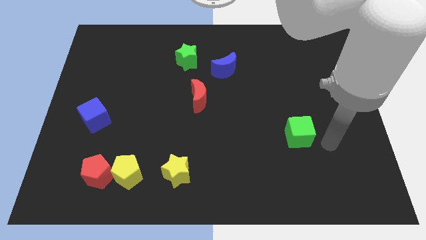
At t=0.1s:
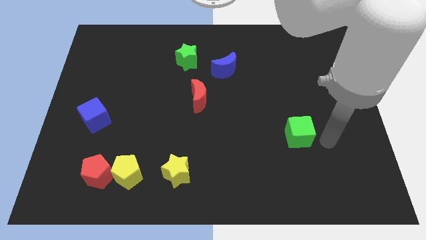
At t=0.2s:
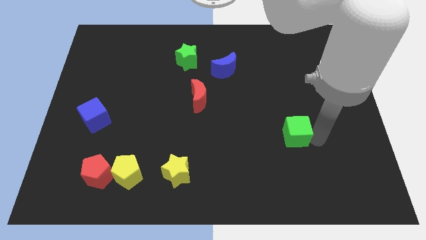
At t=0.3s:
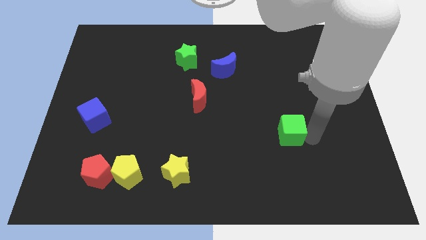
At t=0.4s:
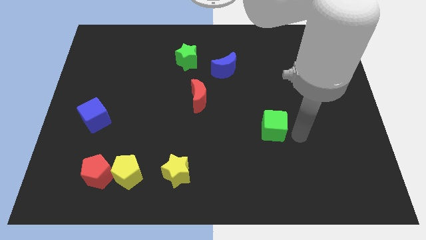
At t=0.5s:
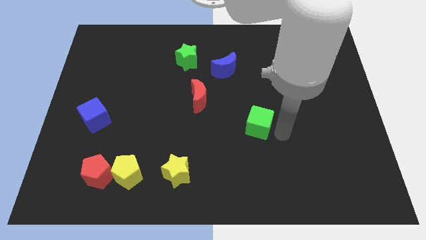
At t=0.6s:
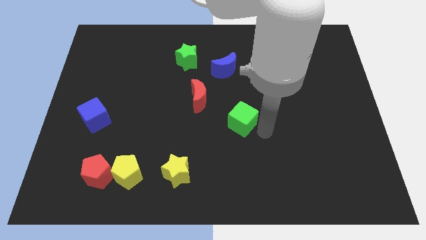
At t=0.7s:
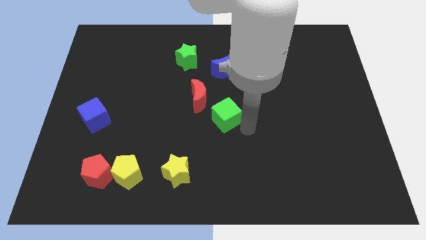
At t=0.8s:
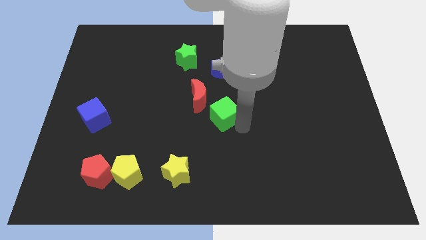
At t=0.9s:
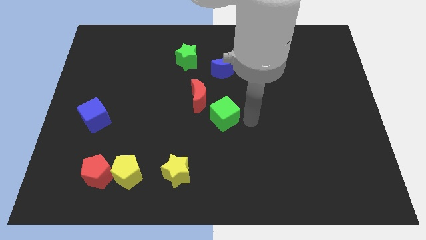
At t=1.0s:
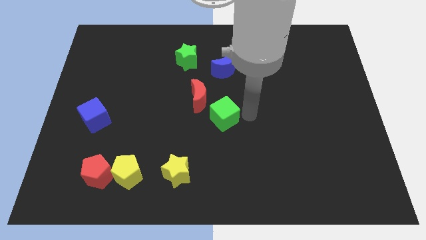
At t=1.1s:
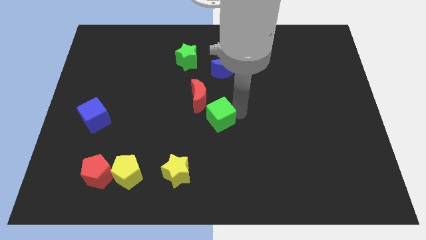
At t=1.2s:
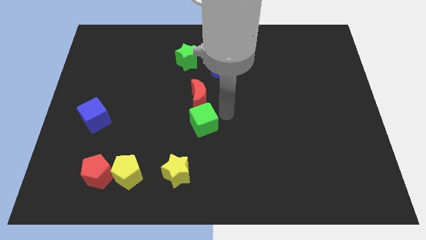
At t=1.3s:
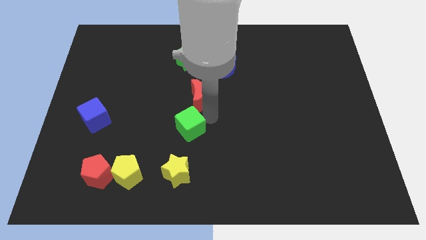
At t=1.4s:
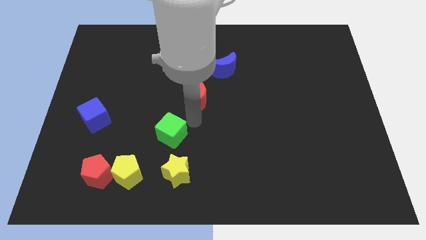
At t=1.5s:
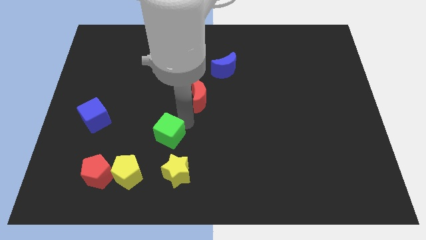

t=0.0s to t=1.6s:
push the green cube upwards to the yellow star

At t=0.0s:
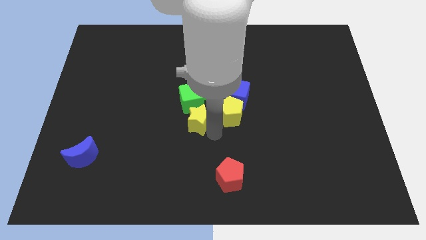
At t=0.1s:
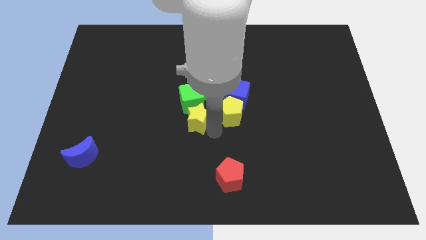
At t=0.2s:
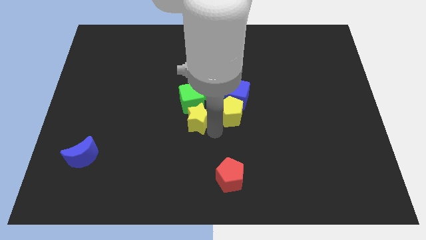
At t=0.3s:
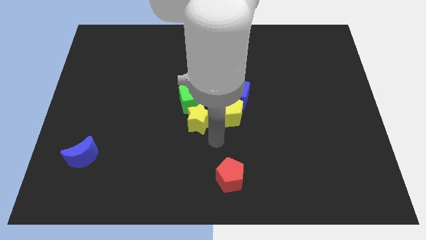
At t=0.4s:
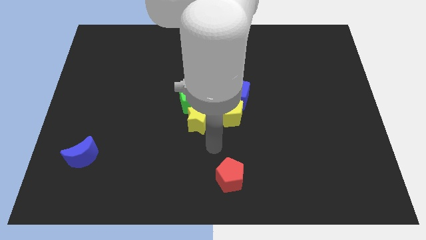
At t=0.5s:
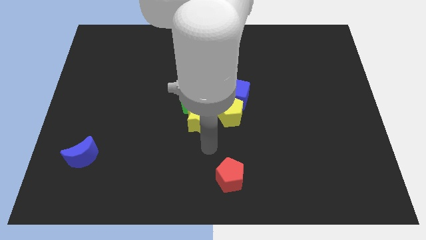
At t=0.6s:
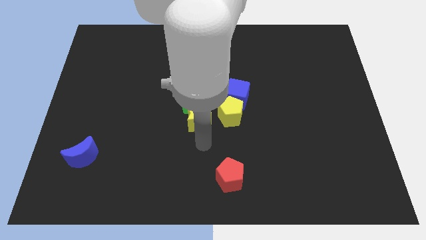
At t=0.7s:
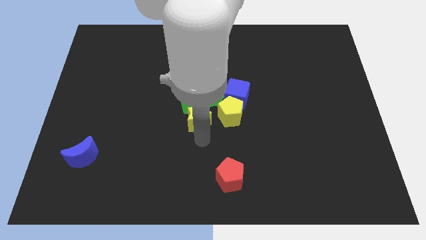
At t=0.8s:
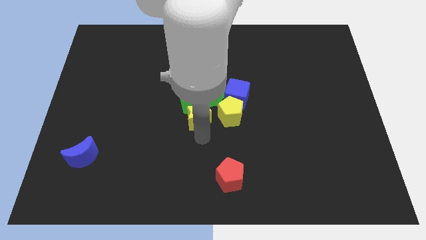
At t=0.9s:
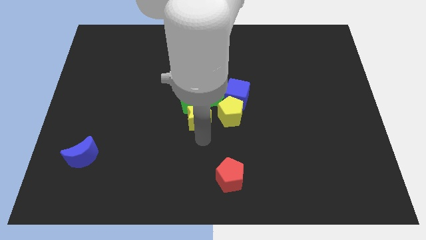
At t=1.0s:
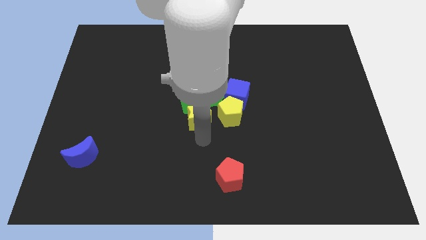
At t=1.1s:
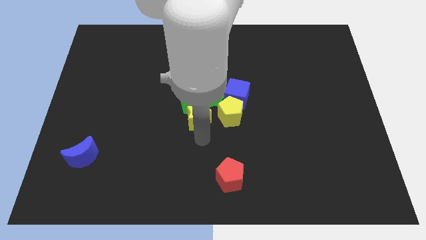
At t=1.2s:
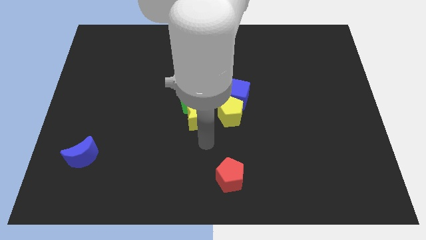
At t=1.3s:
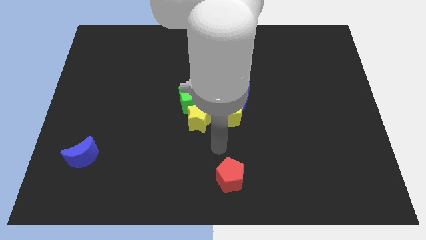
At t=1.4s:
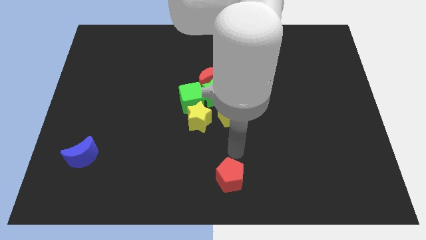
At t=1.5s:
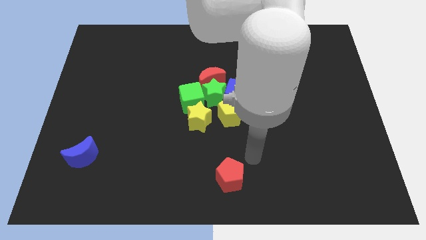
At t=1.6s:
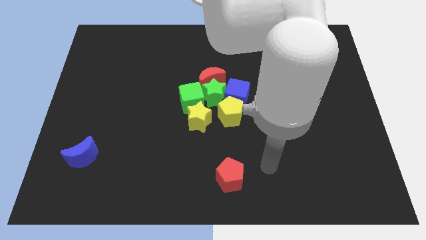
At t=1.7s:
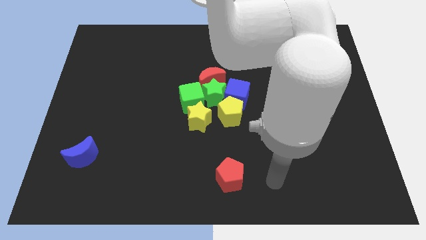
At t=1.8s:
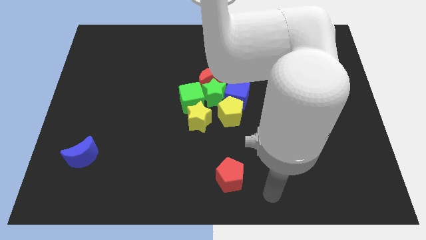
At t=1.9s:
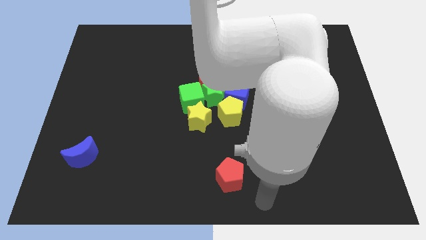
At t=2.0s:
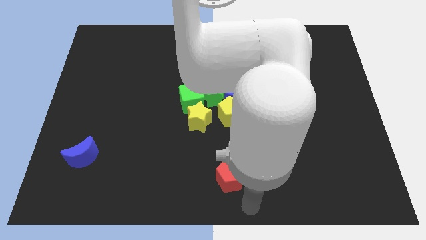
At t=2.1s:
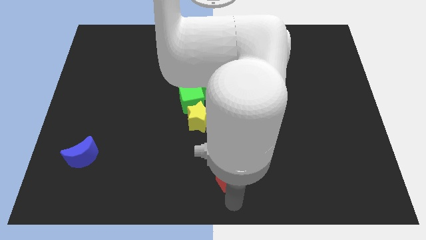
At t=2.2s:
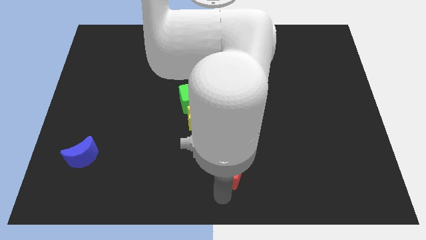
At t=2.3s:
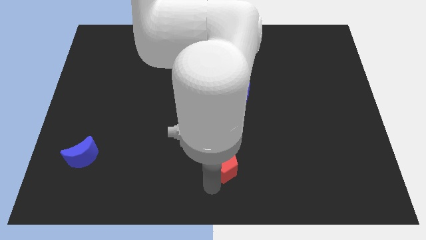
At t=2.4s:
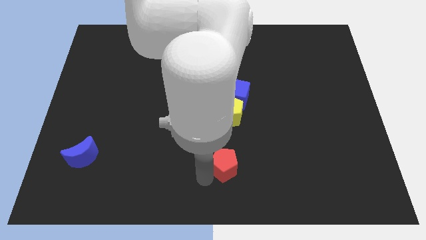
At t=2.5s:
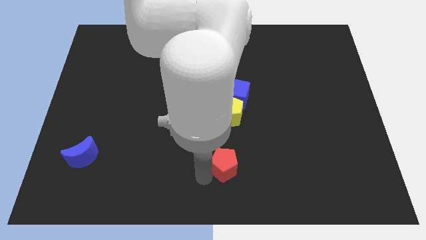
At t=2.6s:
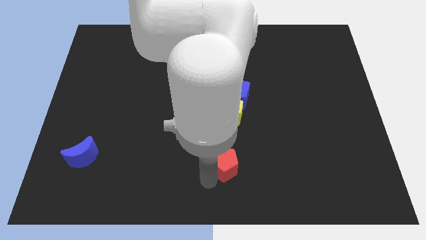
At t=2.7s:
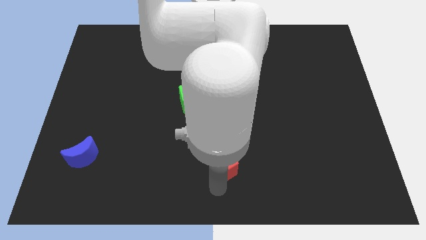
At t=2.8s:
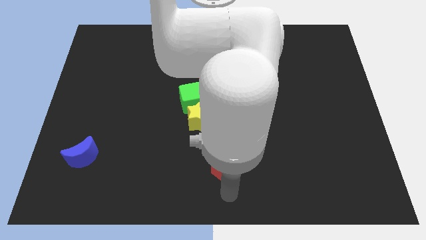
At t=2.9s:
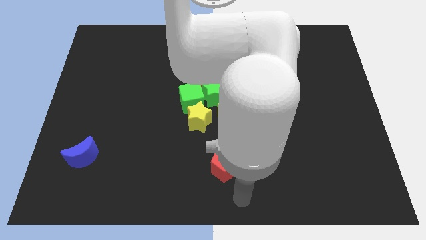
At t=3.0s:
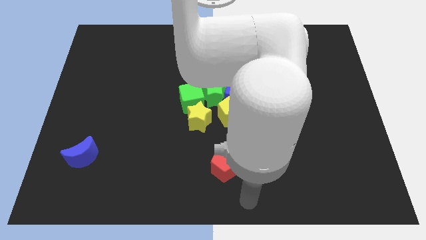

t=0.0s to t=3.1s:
place the arm down to the red pentagon

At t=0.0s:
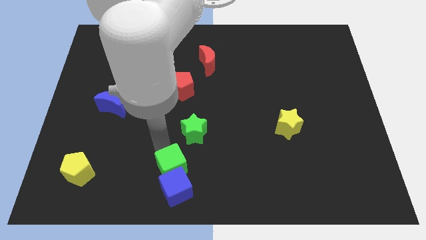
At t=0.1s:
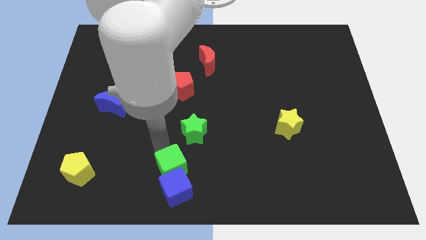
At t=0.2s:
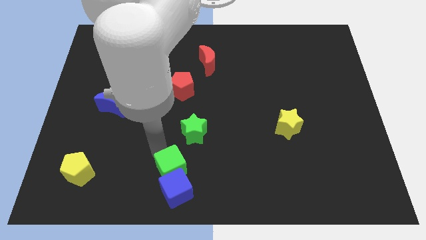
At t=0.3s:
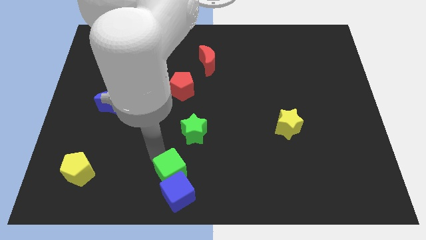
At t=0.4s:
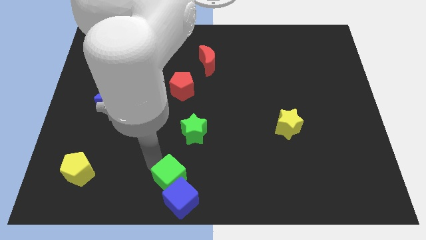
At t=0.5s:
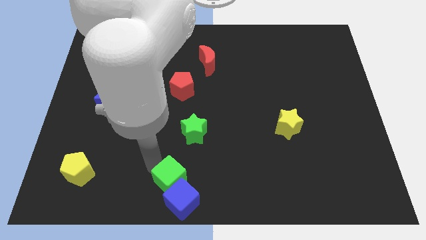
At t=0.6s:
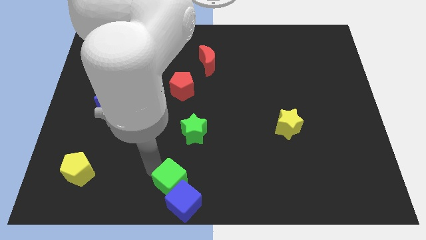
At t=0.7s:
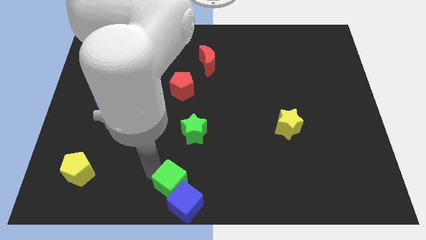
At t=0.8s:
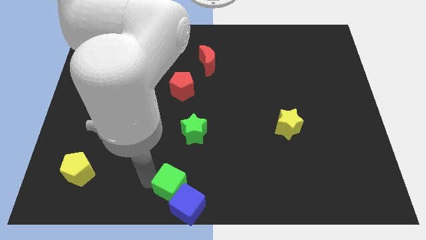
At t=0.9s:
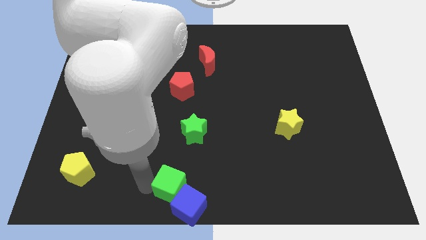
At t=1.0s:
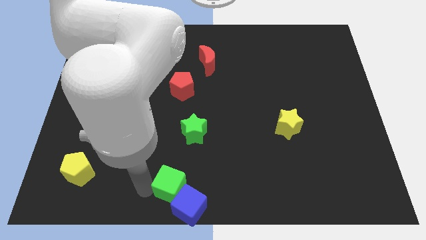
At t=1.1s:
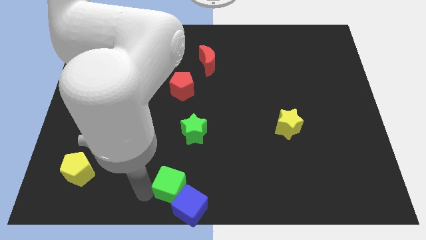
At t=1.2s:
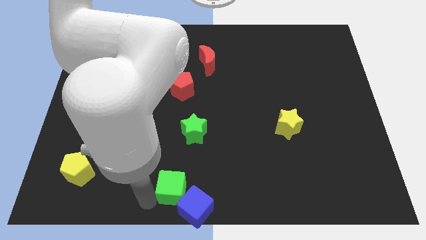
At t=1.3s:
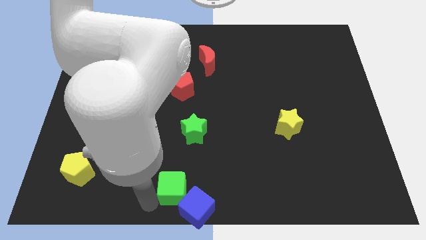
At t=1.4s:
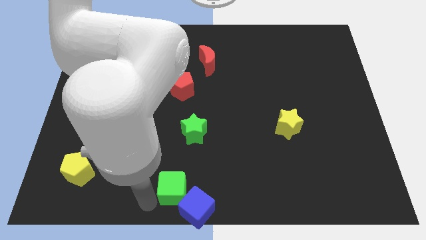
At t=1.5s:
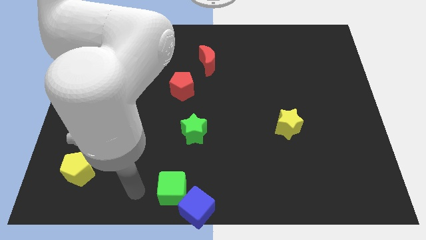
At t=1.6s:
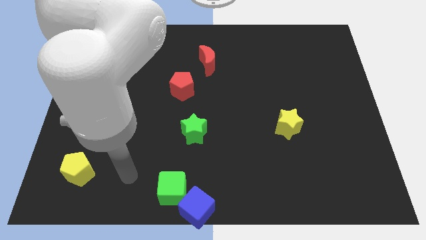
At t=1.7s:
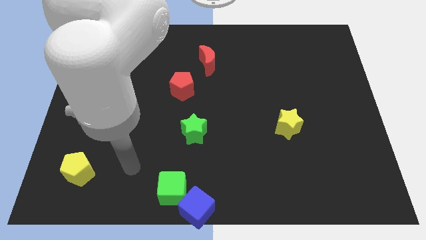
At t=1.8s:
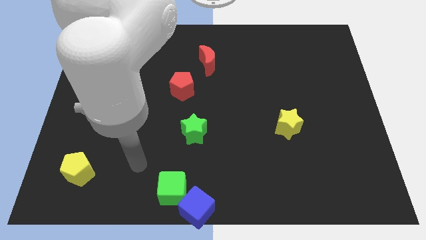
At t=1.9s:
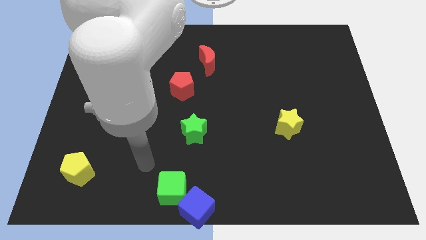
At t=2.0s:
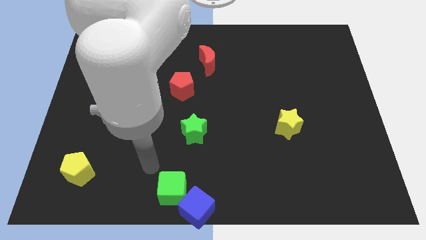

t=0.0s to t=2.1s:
move the green cube and the blue cube to the bottom center of the board

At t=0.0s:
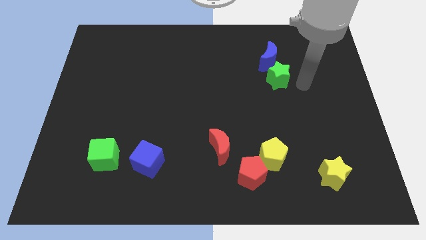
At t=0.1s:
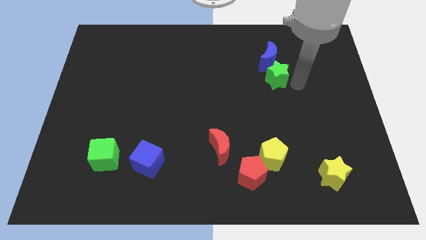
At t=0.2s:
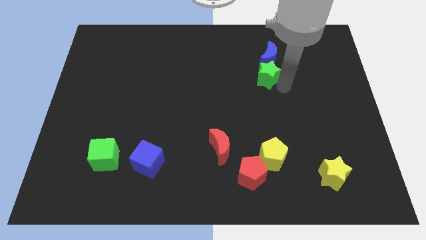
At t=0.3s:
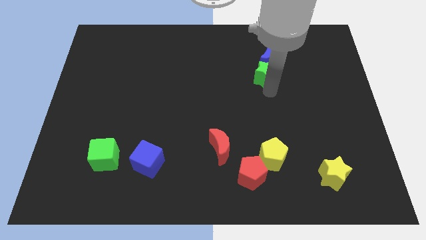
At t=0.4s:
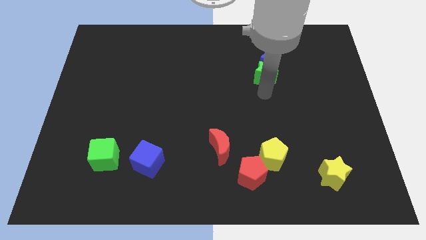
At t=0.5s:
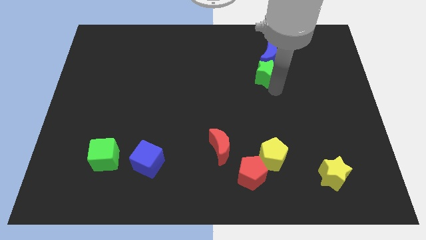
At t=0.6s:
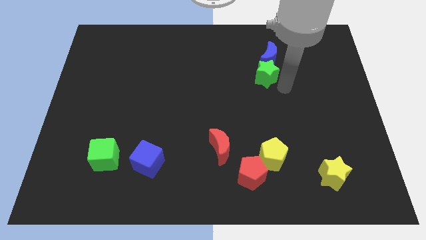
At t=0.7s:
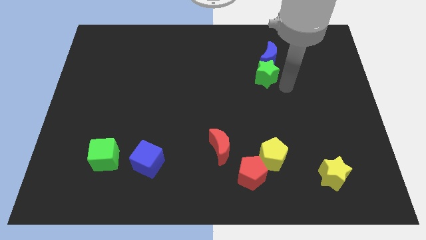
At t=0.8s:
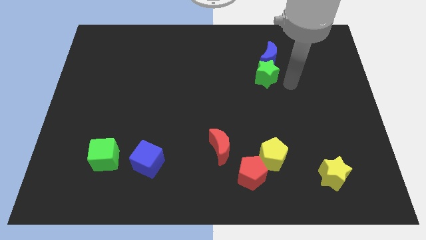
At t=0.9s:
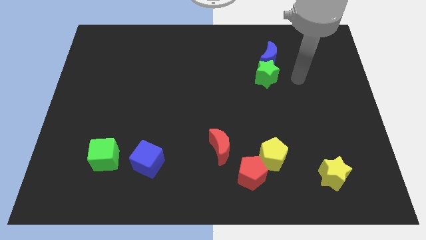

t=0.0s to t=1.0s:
place the green star and the blue crescent together

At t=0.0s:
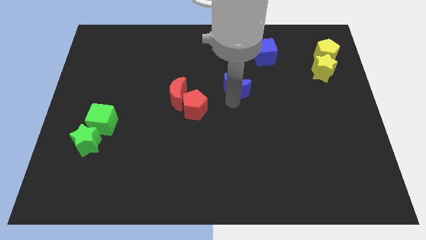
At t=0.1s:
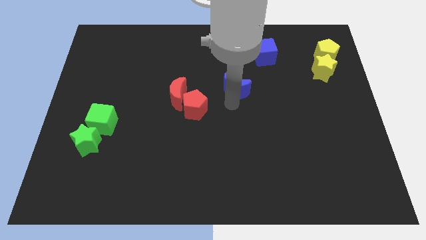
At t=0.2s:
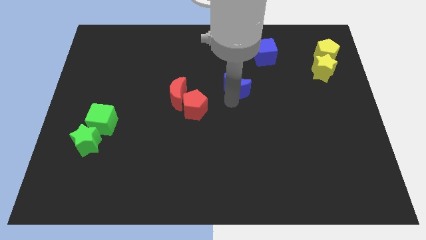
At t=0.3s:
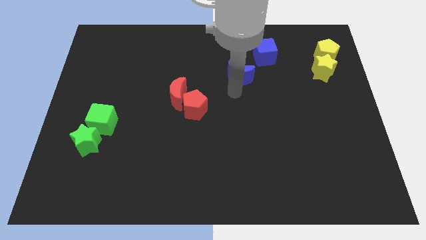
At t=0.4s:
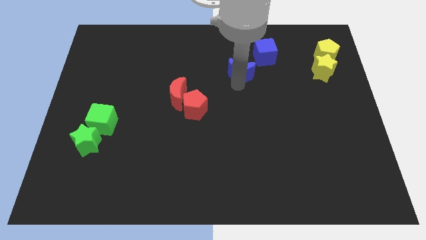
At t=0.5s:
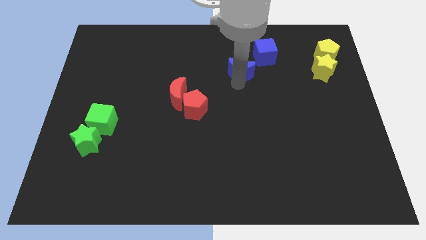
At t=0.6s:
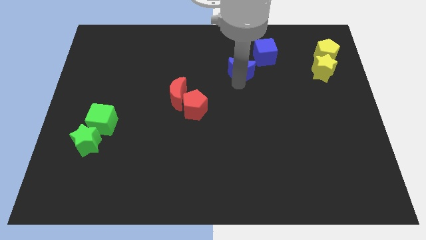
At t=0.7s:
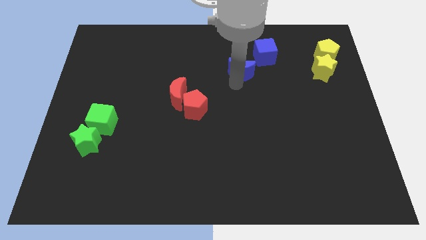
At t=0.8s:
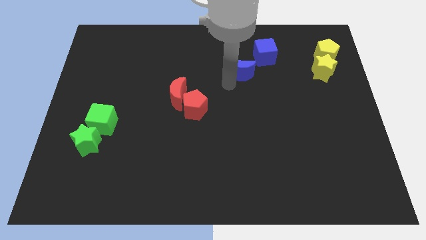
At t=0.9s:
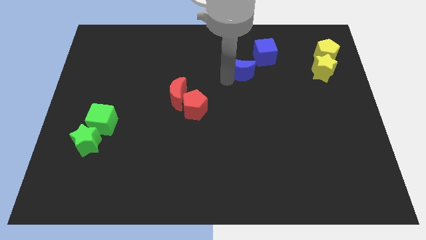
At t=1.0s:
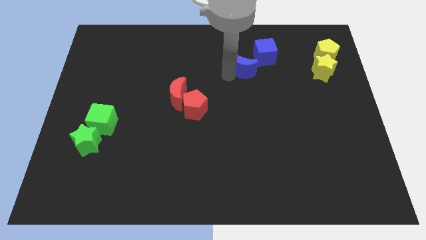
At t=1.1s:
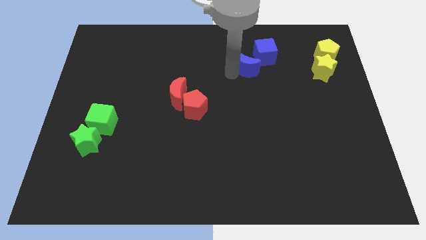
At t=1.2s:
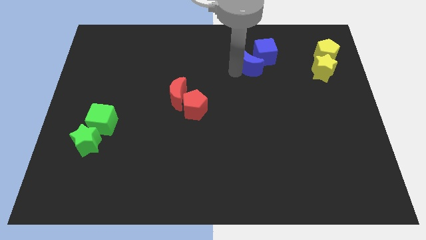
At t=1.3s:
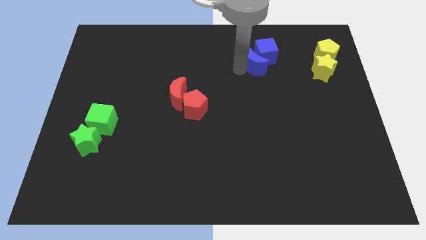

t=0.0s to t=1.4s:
push the blue moon into the blue cube
